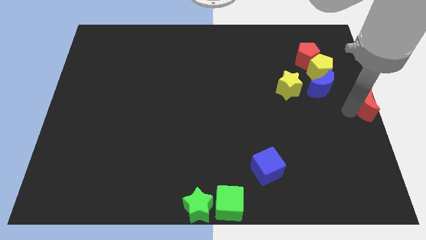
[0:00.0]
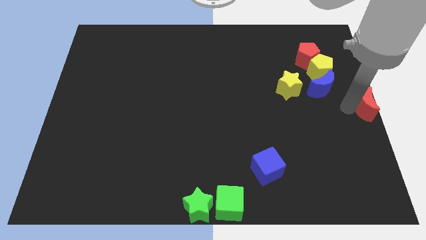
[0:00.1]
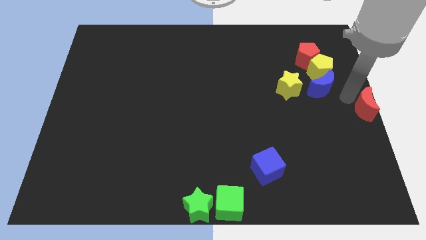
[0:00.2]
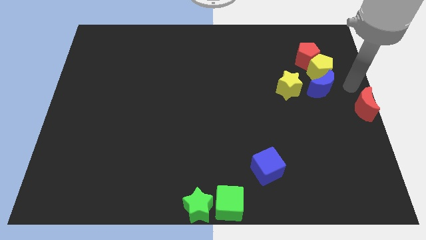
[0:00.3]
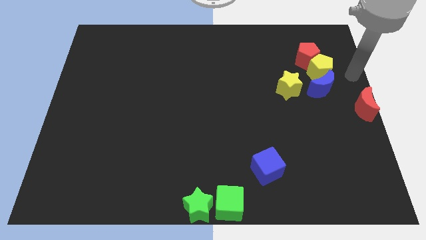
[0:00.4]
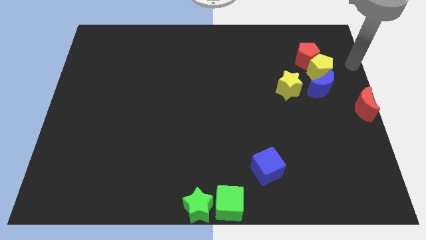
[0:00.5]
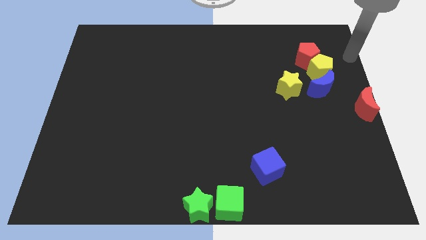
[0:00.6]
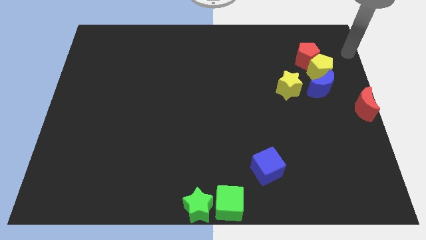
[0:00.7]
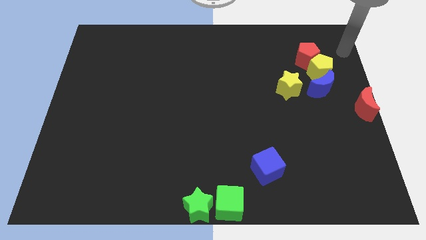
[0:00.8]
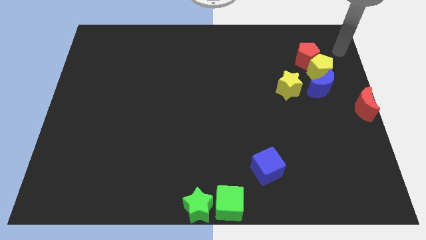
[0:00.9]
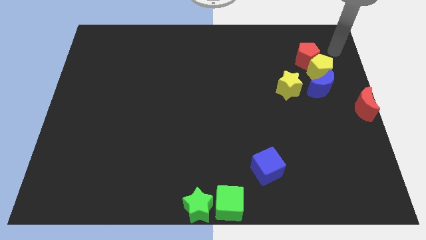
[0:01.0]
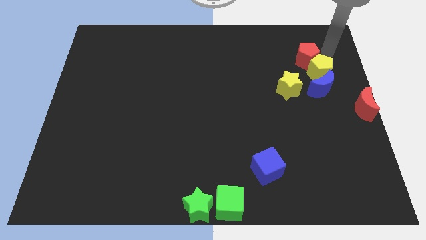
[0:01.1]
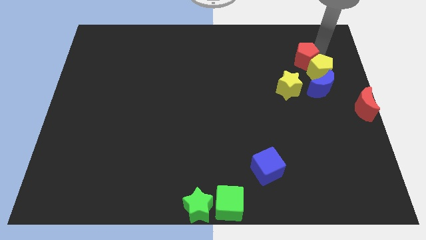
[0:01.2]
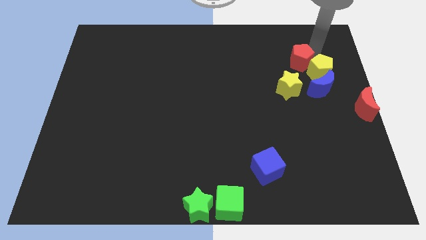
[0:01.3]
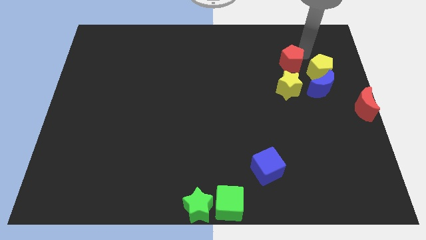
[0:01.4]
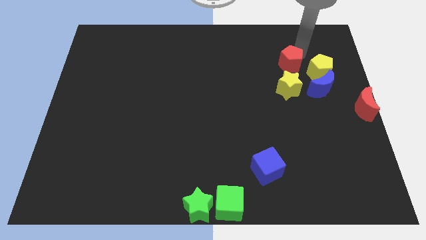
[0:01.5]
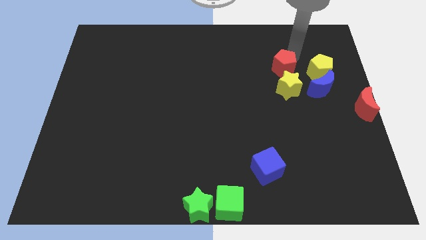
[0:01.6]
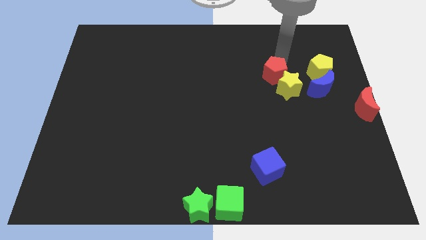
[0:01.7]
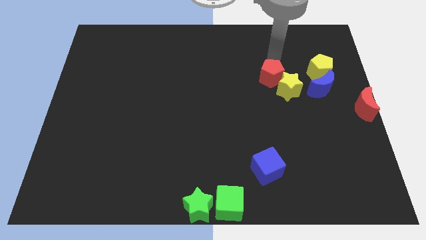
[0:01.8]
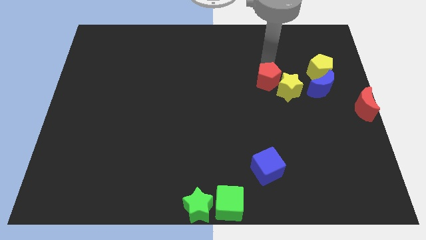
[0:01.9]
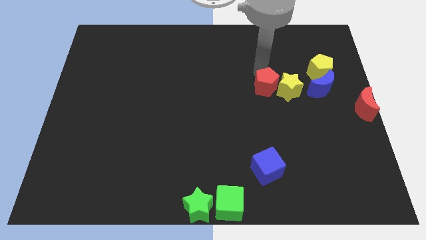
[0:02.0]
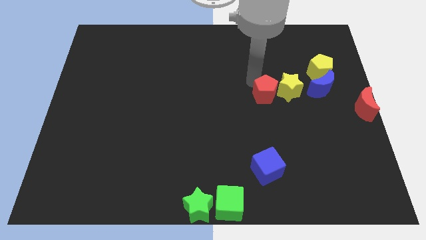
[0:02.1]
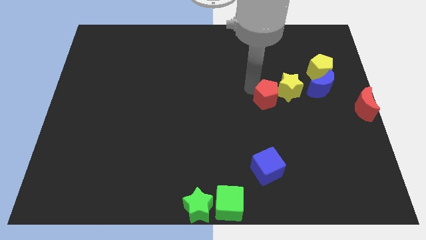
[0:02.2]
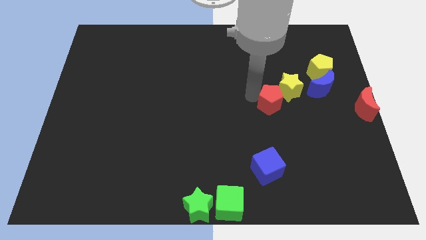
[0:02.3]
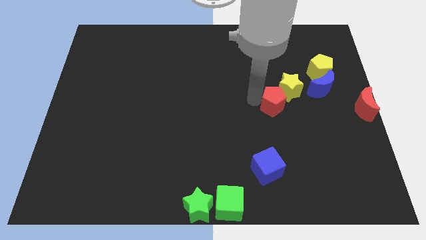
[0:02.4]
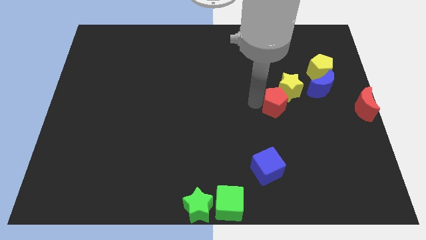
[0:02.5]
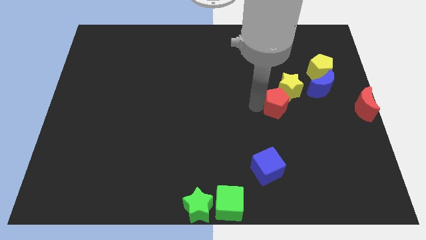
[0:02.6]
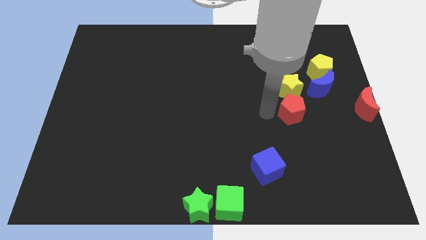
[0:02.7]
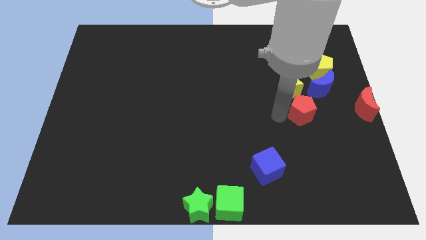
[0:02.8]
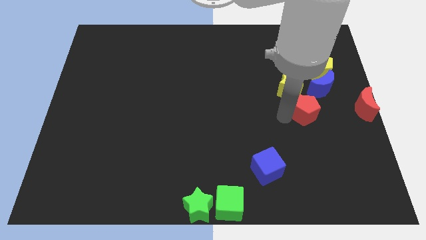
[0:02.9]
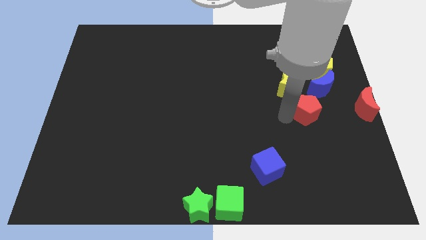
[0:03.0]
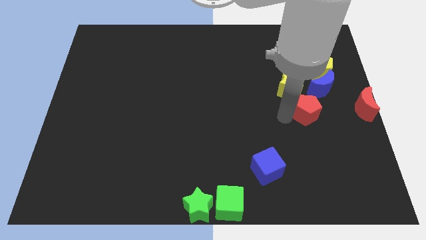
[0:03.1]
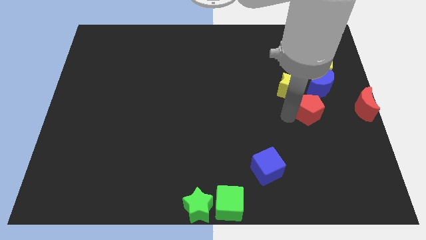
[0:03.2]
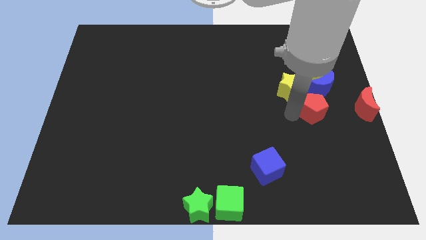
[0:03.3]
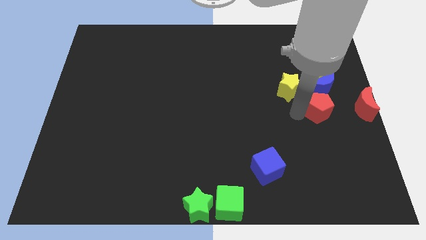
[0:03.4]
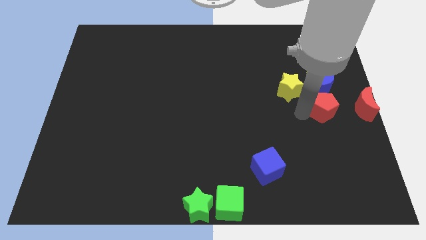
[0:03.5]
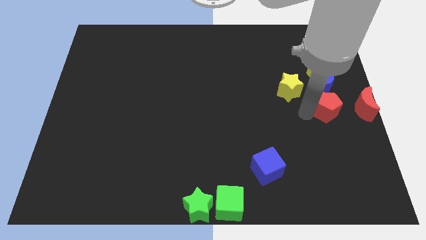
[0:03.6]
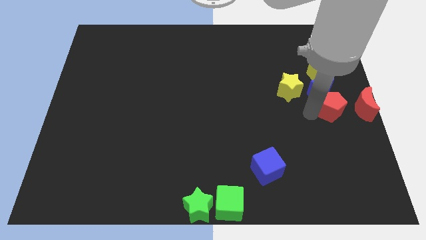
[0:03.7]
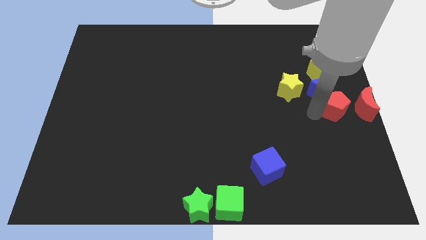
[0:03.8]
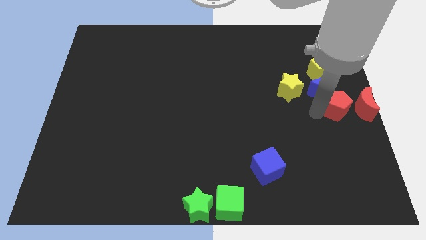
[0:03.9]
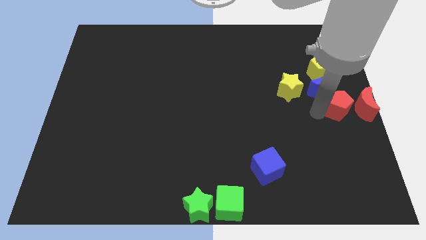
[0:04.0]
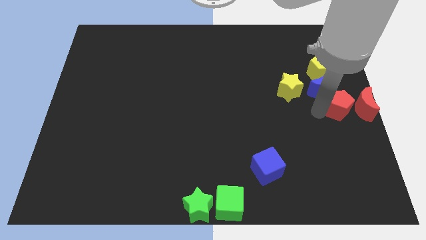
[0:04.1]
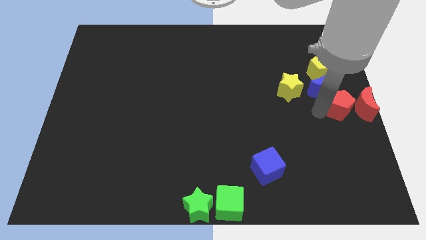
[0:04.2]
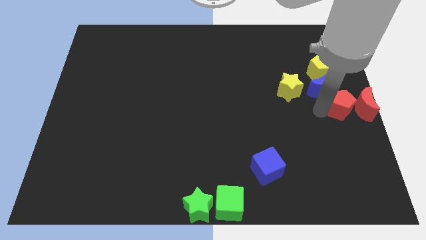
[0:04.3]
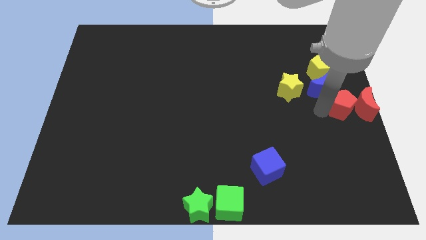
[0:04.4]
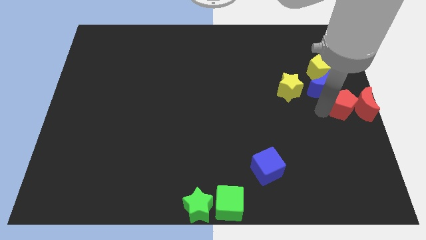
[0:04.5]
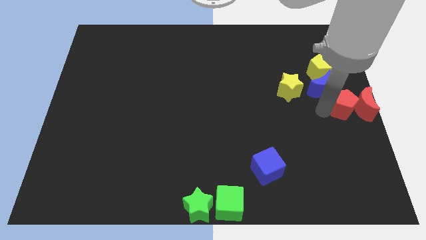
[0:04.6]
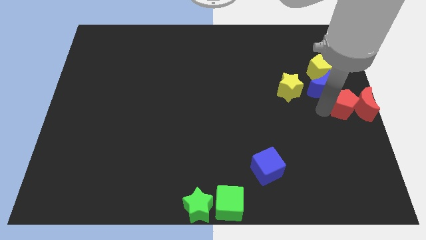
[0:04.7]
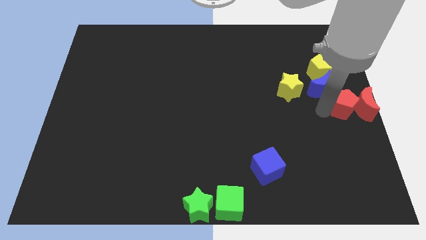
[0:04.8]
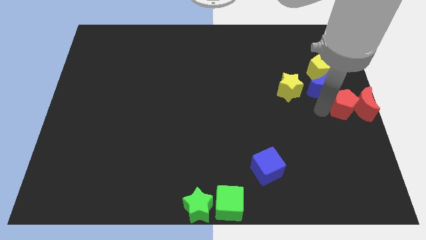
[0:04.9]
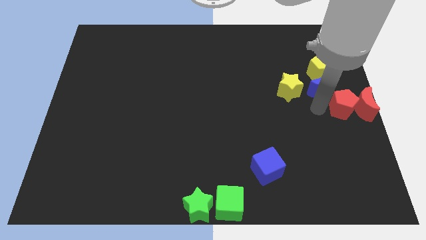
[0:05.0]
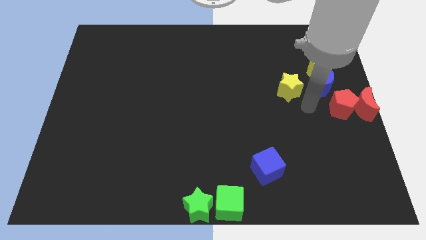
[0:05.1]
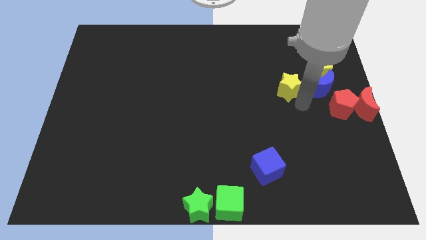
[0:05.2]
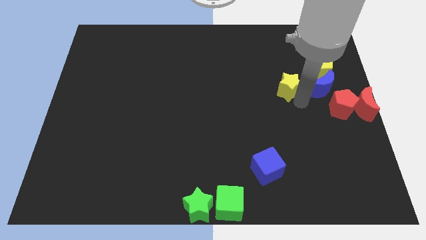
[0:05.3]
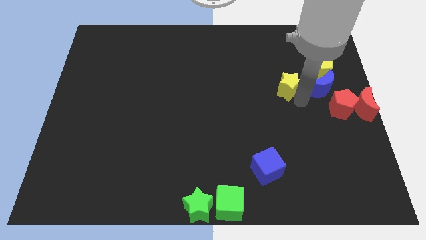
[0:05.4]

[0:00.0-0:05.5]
place red pentagon to the left side of red moon

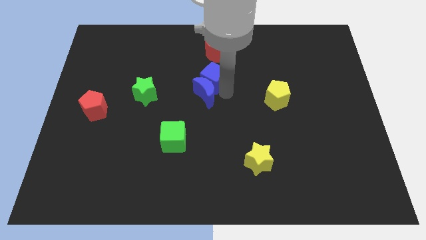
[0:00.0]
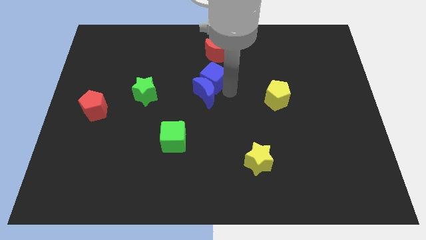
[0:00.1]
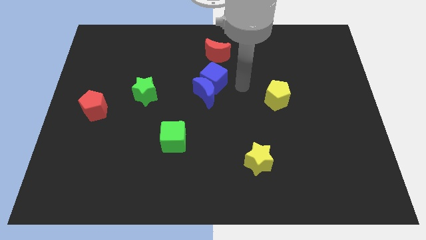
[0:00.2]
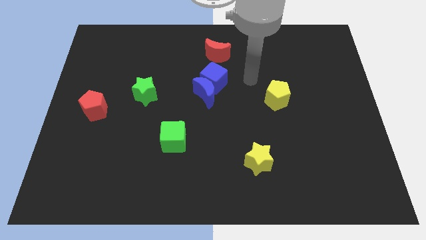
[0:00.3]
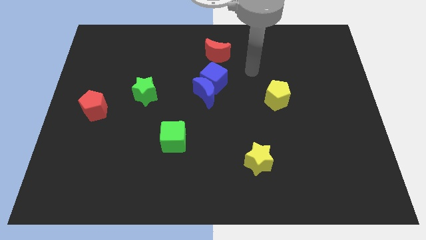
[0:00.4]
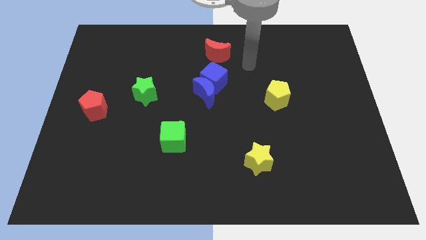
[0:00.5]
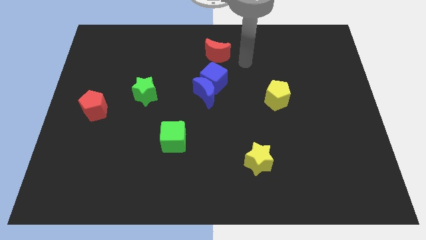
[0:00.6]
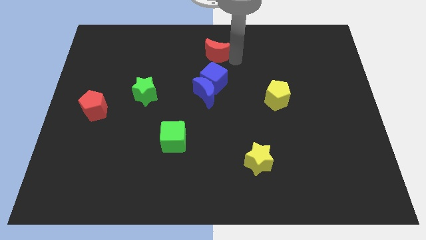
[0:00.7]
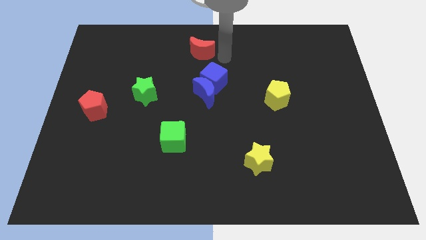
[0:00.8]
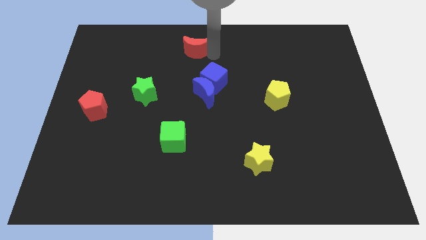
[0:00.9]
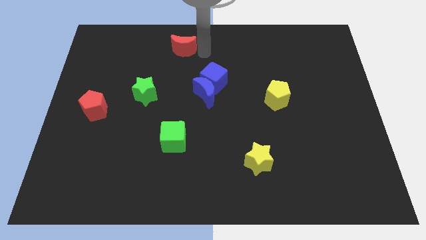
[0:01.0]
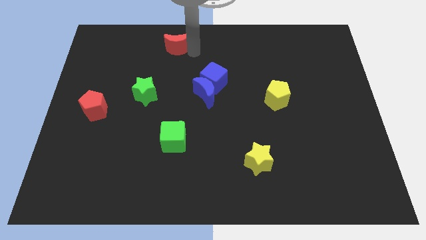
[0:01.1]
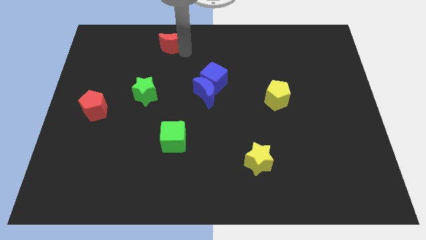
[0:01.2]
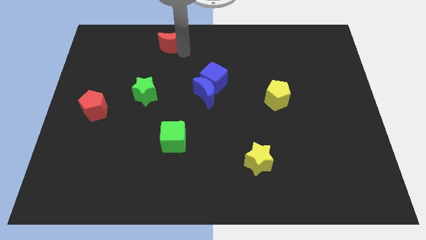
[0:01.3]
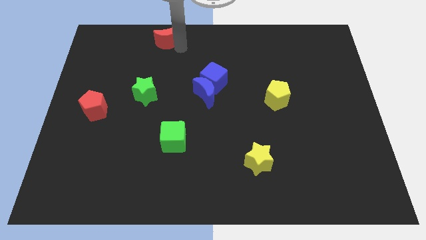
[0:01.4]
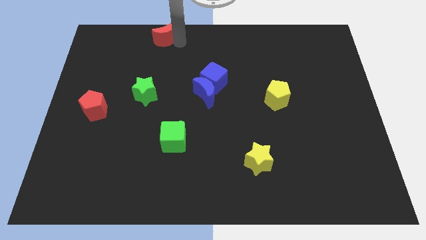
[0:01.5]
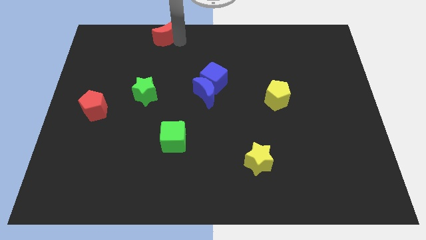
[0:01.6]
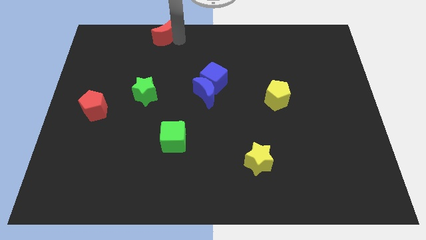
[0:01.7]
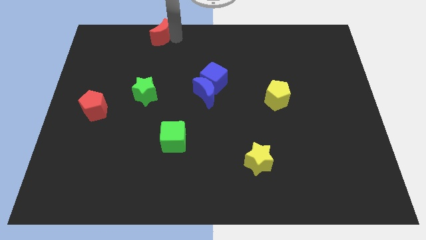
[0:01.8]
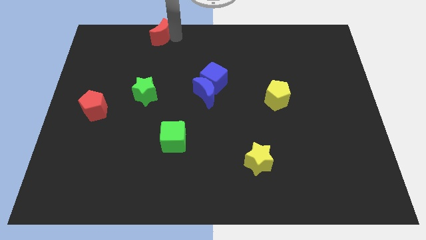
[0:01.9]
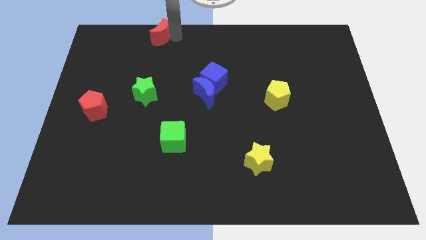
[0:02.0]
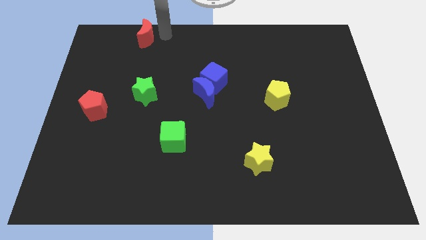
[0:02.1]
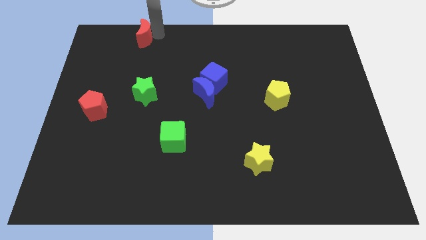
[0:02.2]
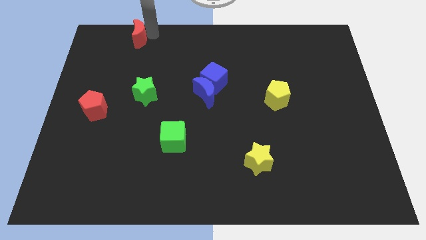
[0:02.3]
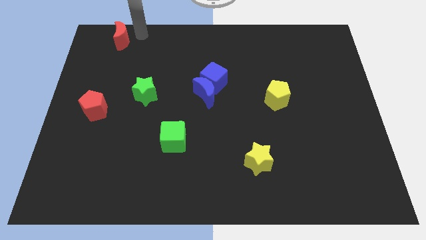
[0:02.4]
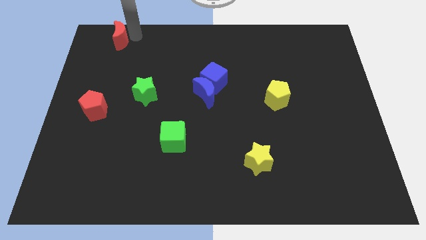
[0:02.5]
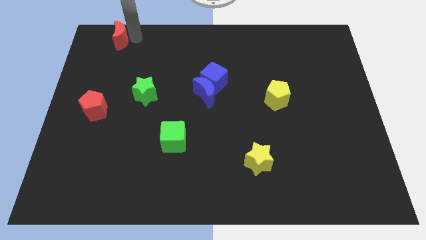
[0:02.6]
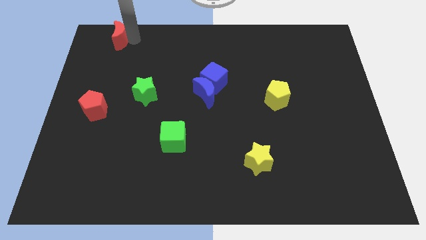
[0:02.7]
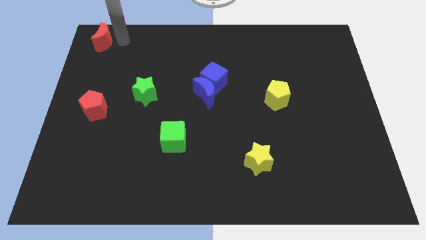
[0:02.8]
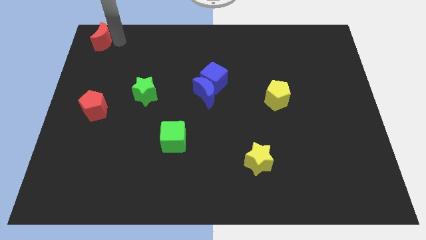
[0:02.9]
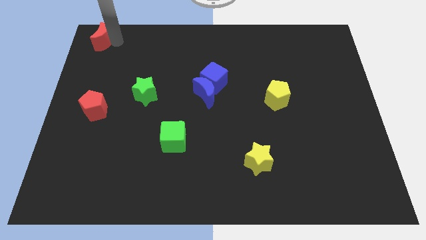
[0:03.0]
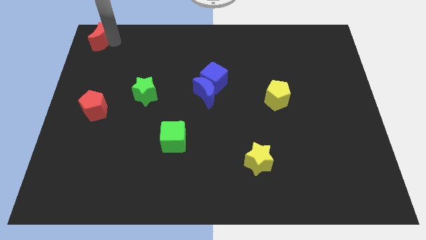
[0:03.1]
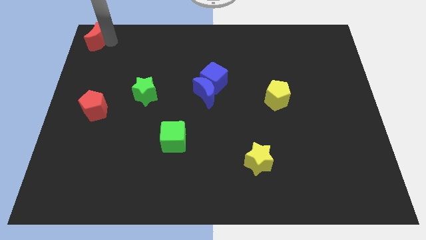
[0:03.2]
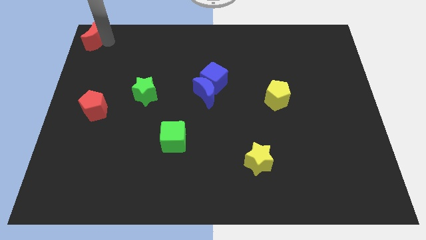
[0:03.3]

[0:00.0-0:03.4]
take the red moon to the top left corner of the board
